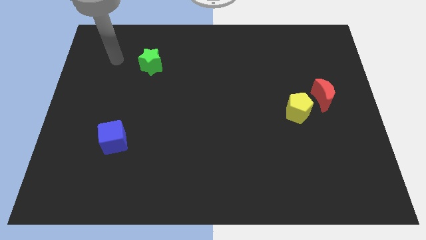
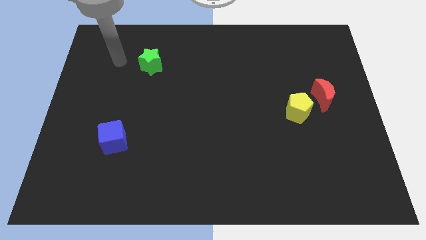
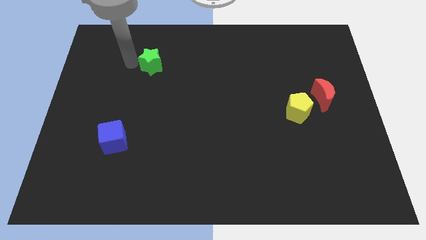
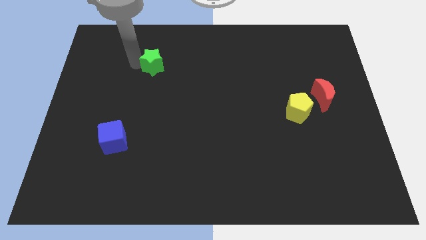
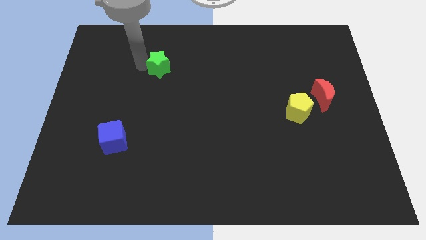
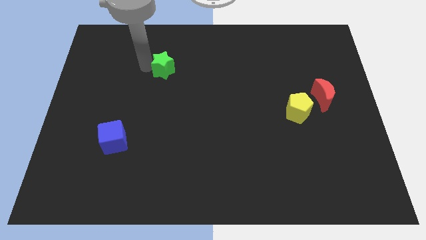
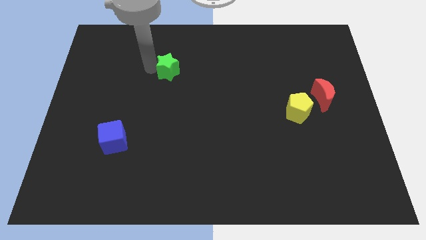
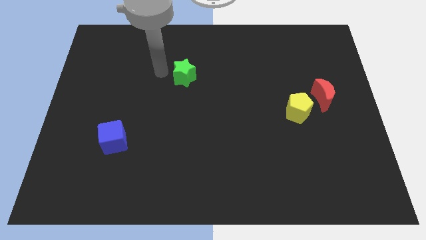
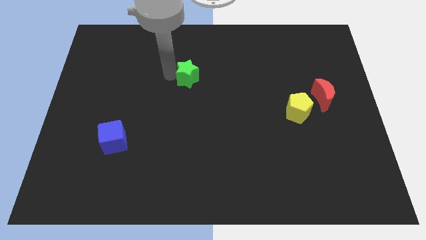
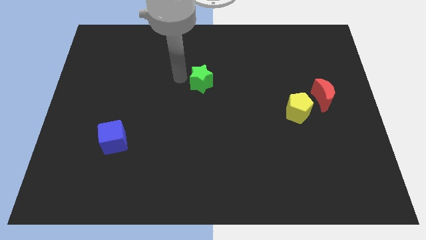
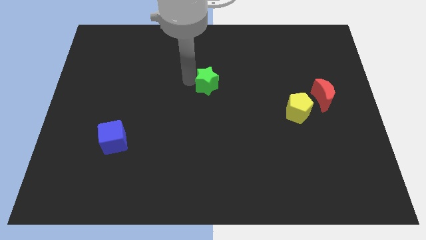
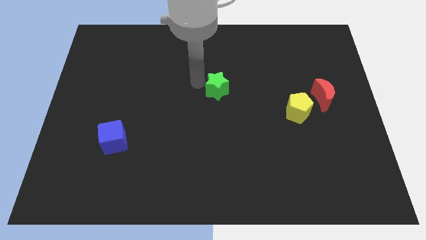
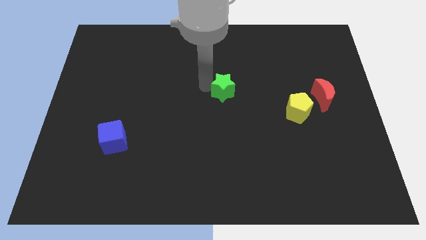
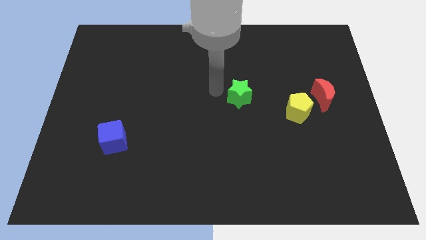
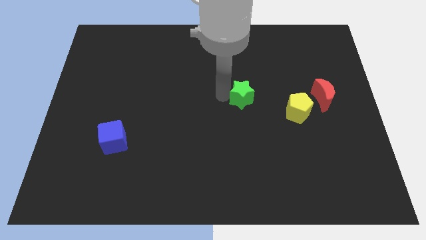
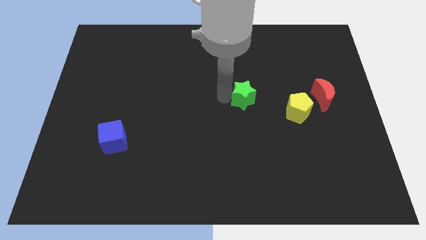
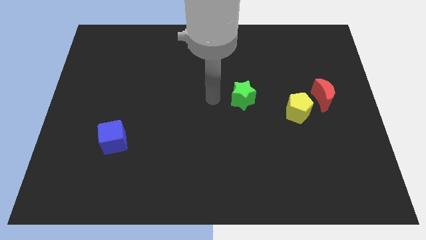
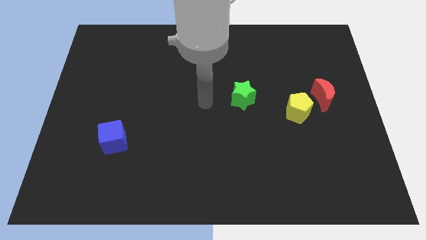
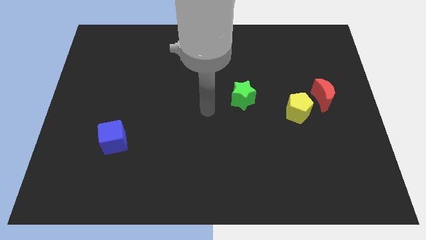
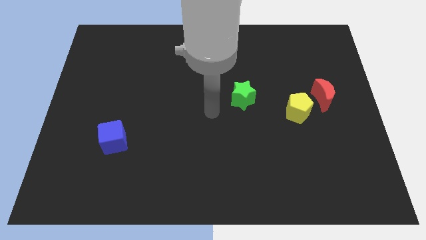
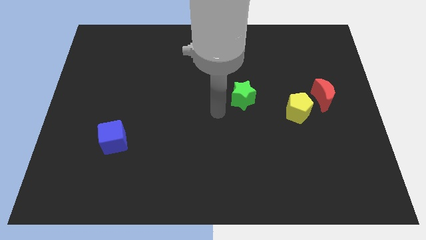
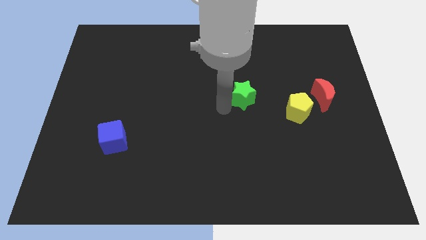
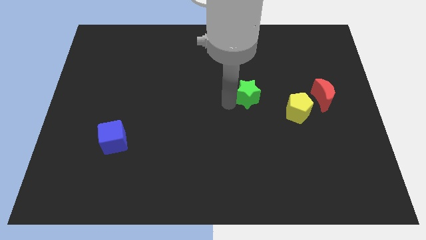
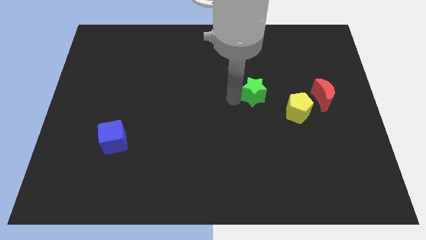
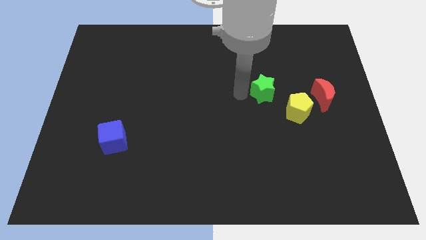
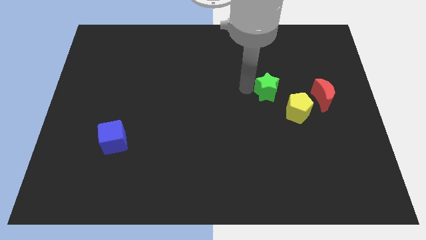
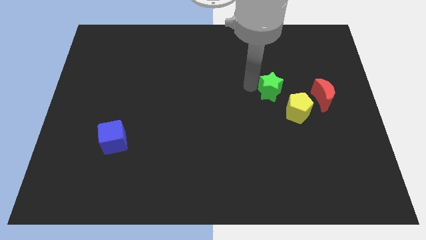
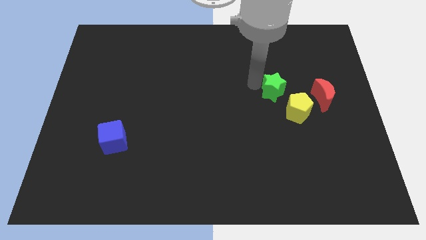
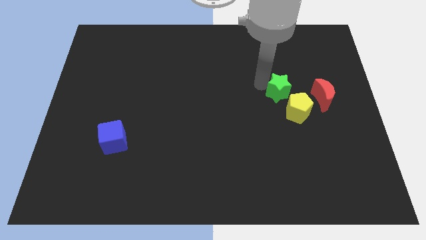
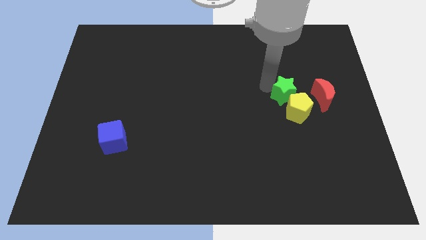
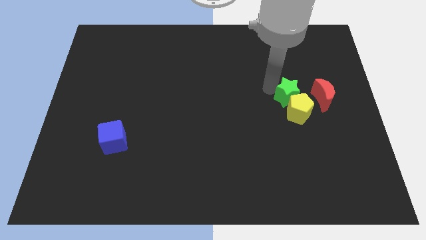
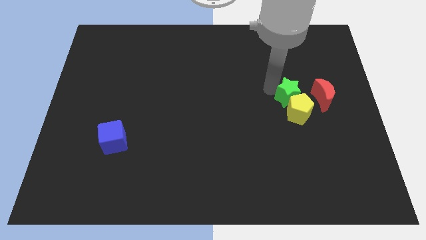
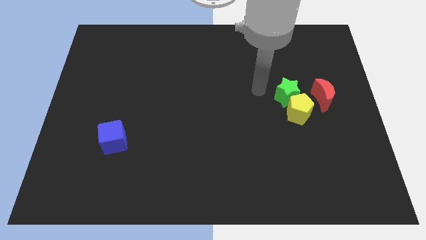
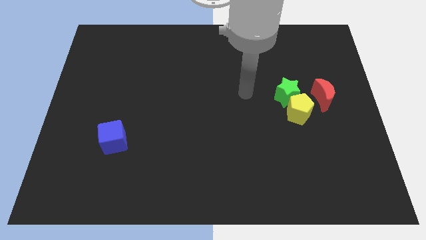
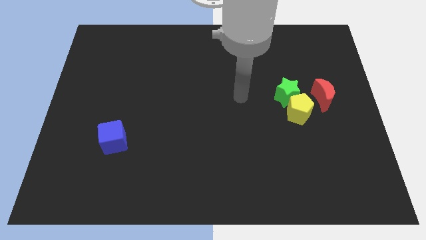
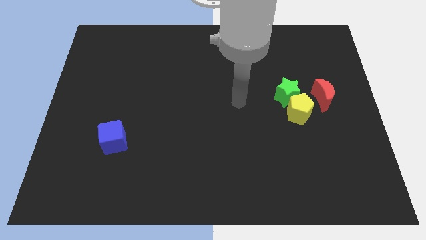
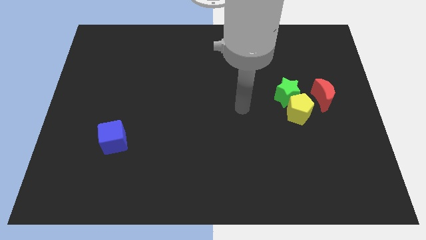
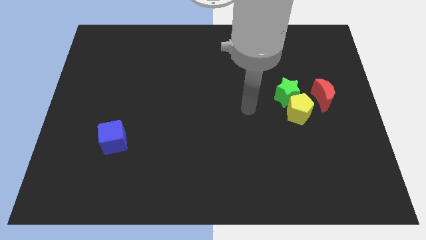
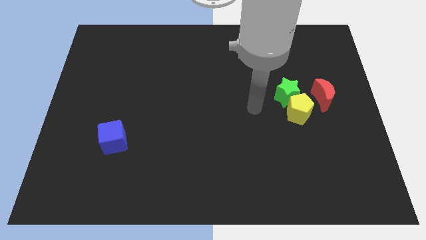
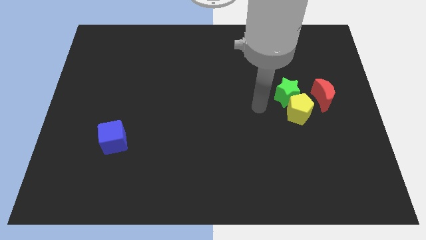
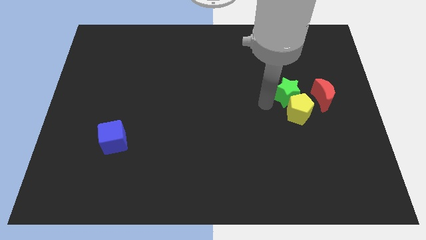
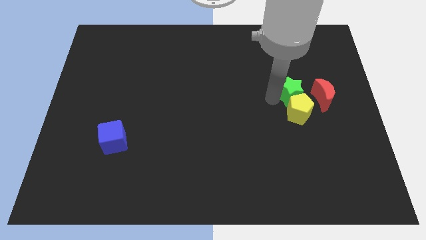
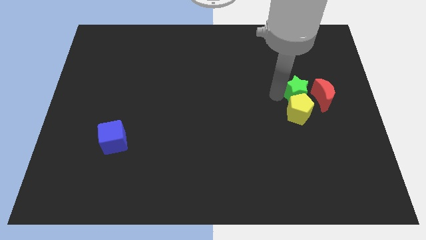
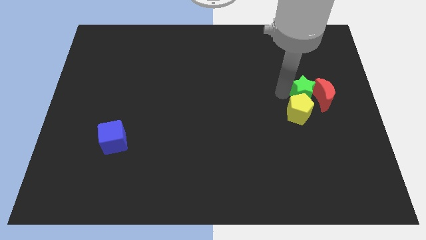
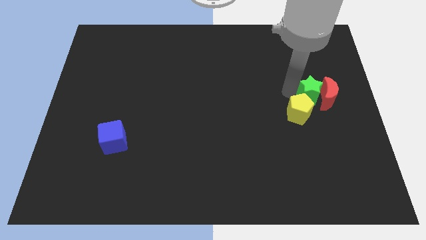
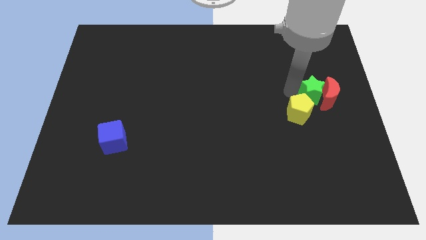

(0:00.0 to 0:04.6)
move the green block close to the red block

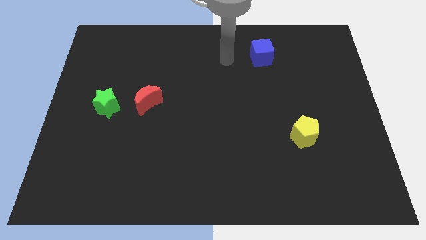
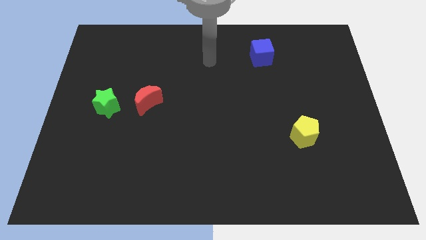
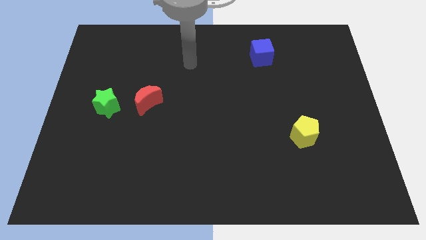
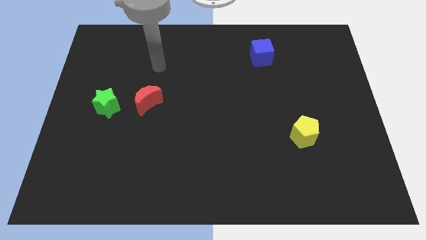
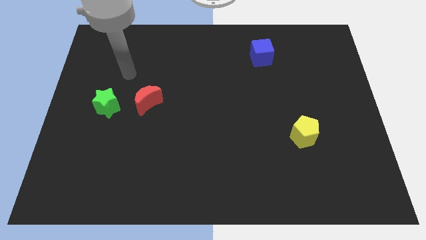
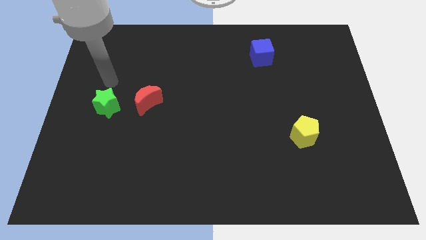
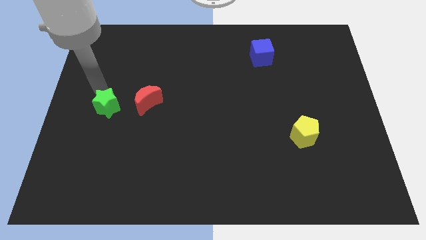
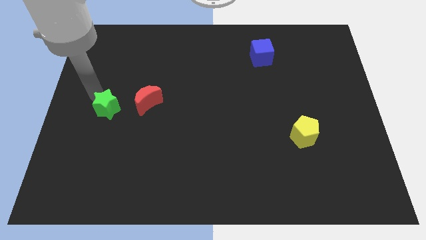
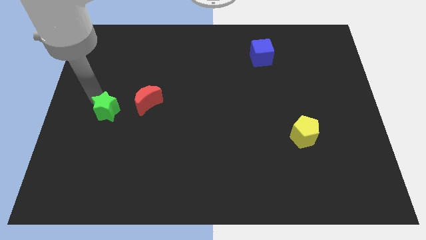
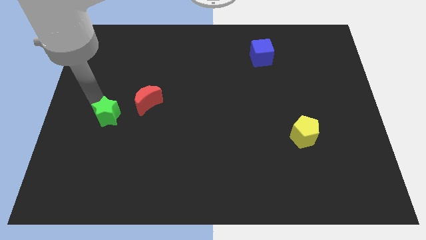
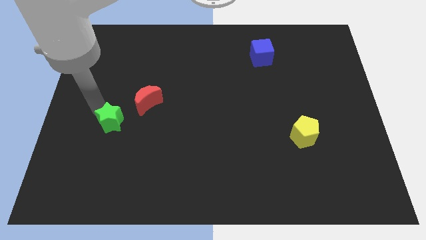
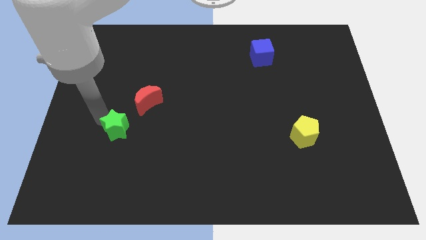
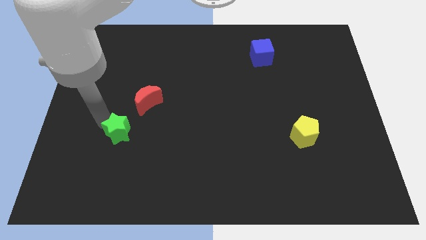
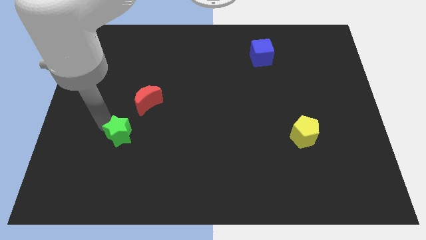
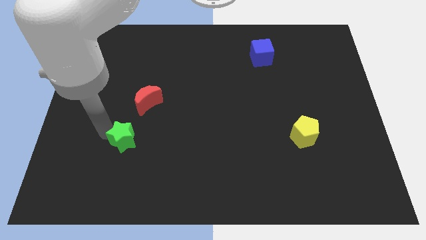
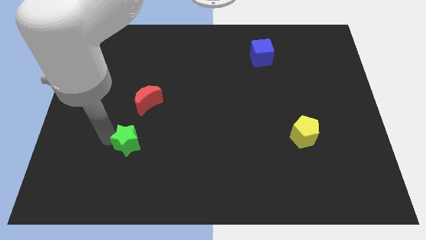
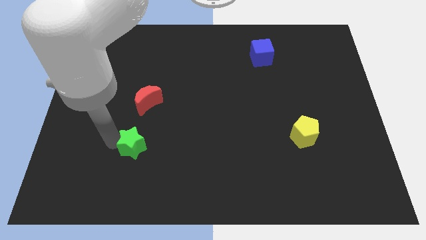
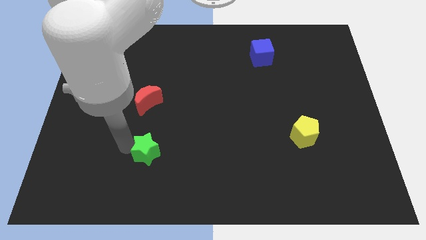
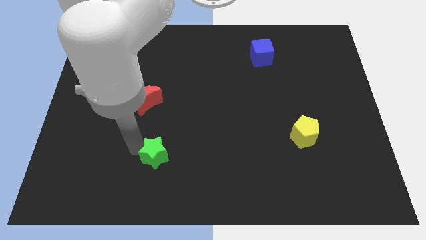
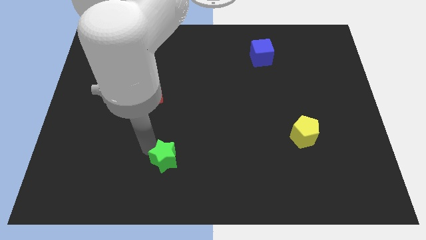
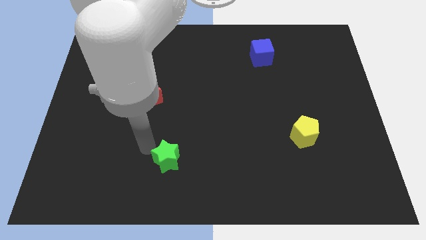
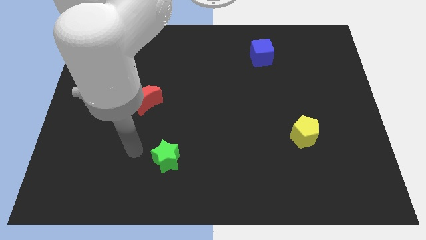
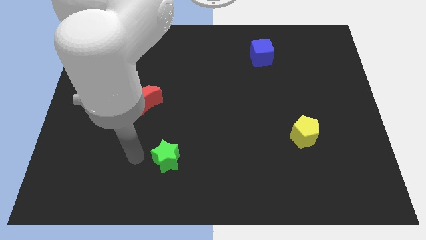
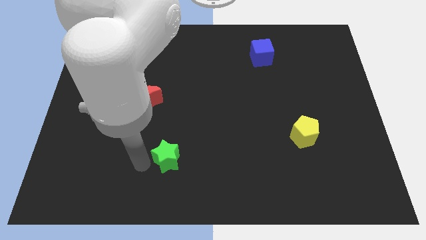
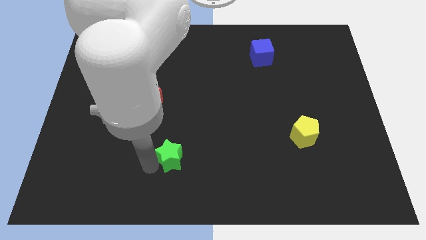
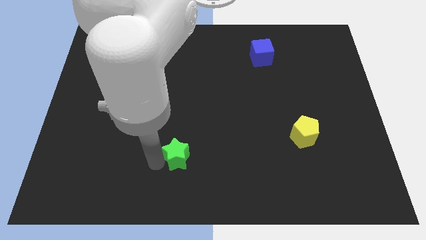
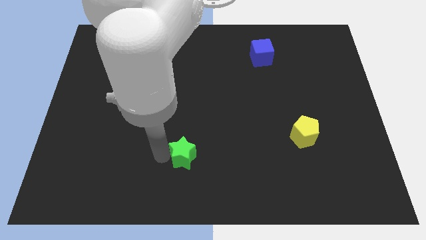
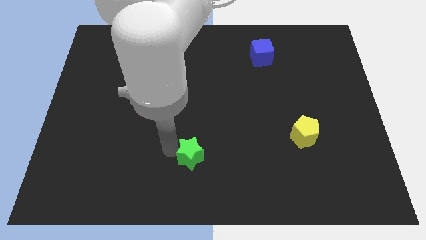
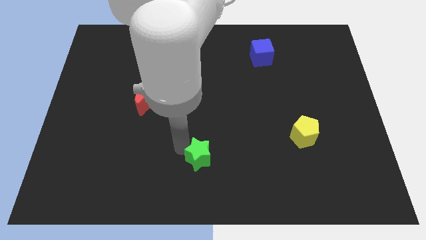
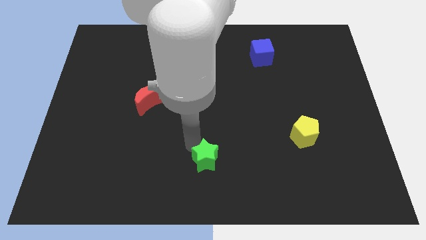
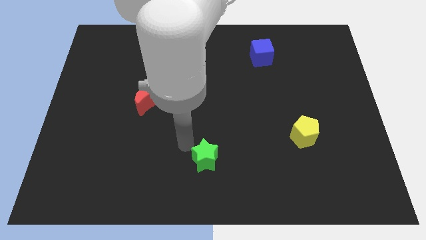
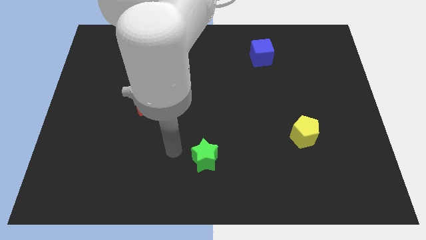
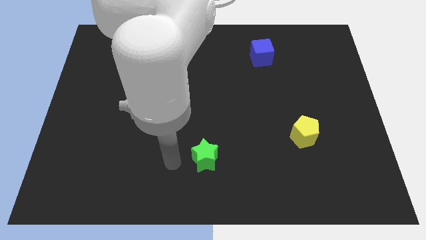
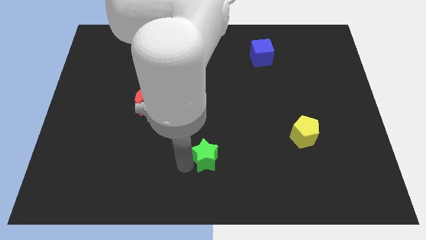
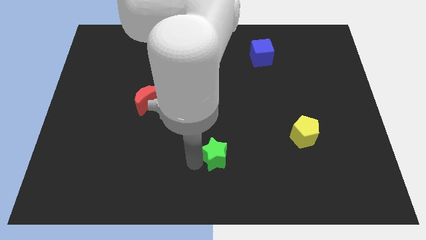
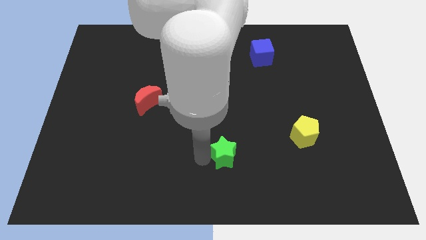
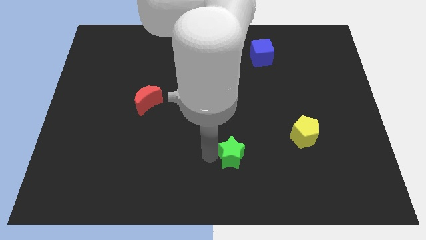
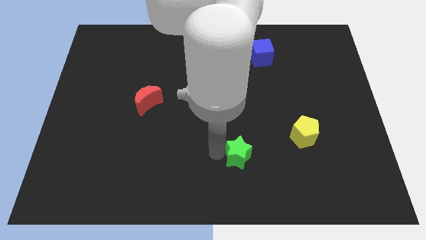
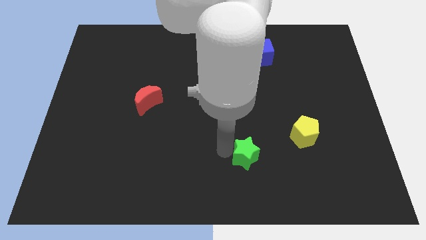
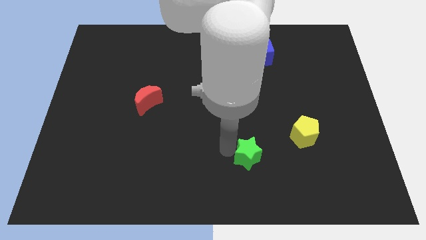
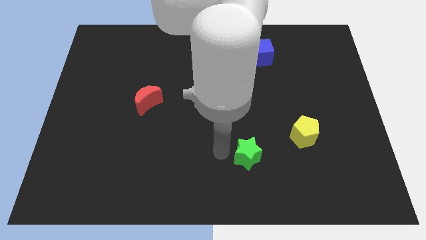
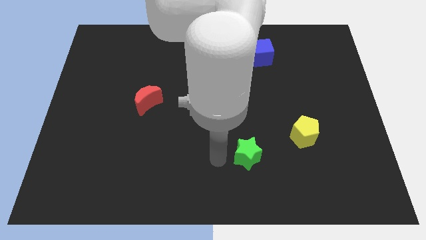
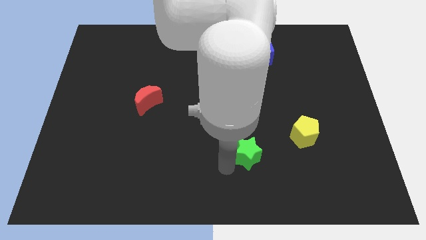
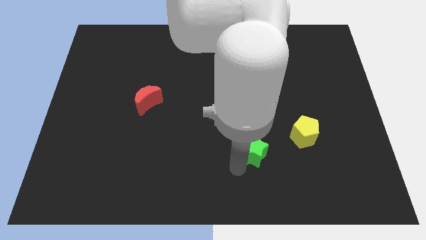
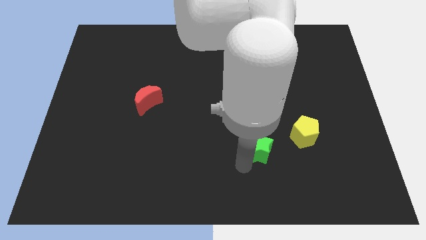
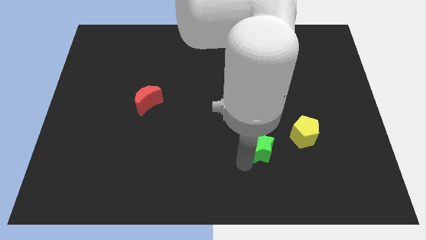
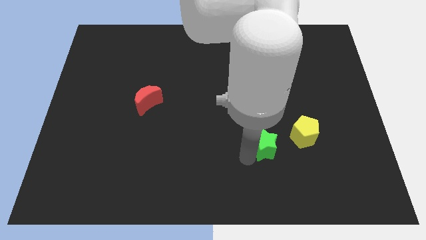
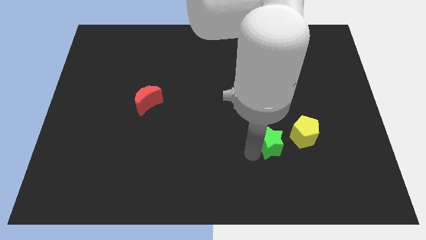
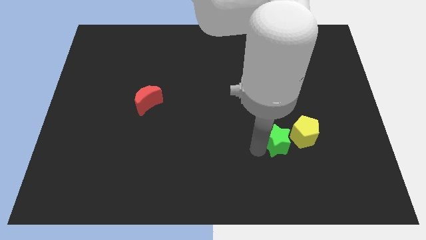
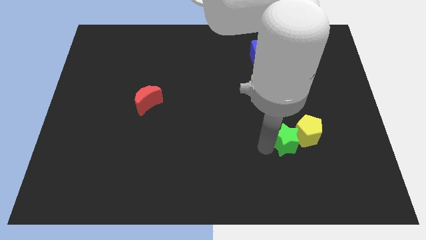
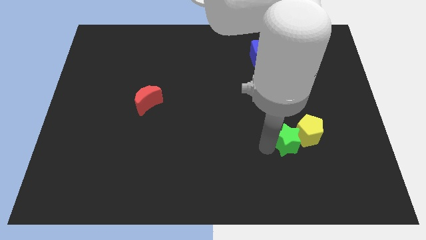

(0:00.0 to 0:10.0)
slide the green block close to the pentagon
